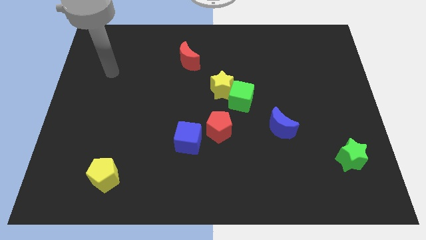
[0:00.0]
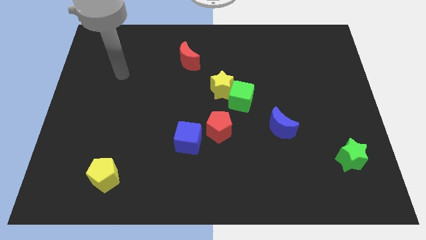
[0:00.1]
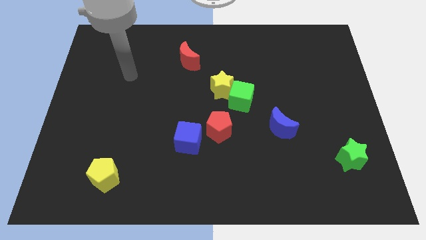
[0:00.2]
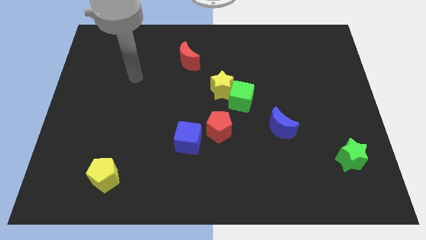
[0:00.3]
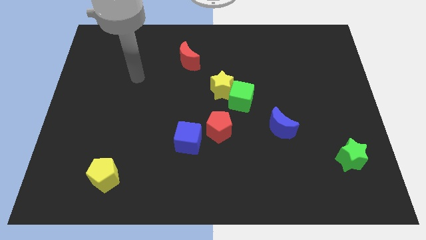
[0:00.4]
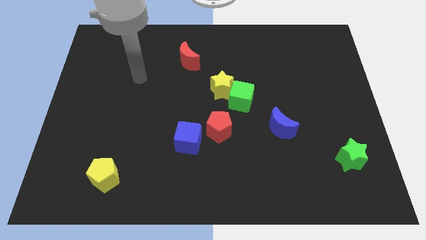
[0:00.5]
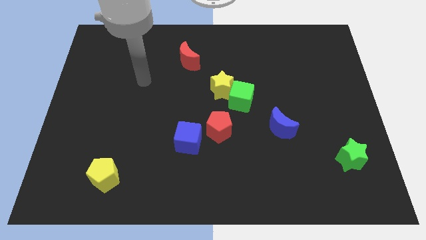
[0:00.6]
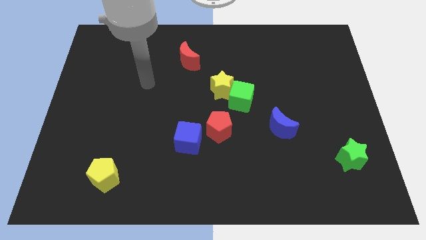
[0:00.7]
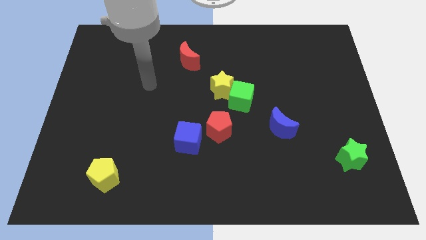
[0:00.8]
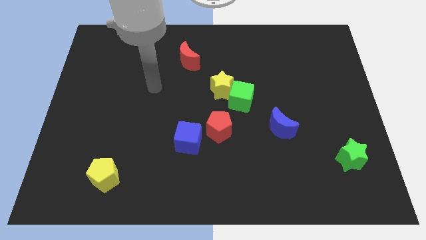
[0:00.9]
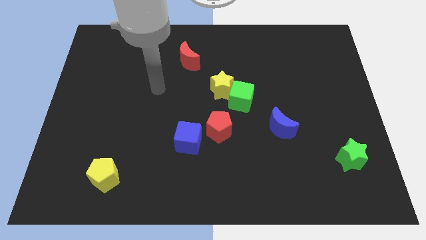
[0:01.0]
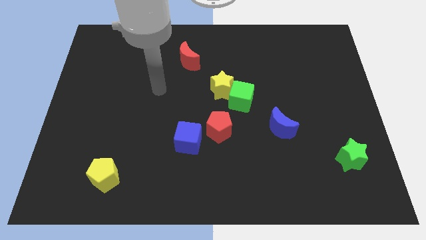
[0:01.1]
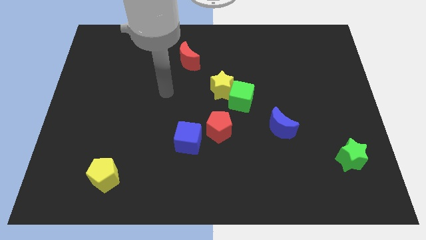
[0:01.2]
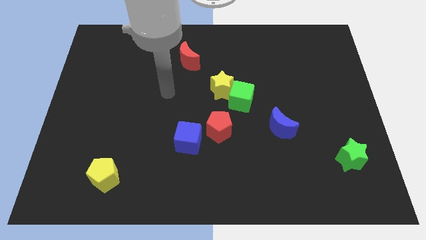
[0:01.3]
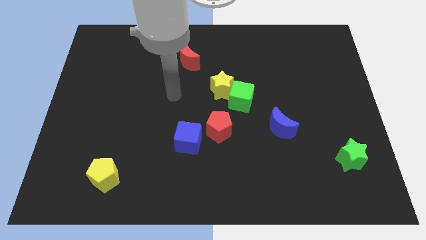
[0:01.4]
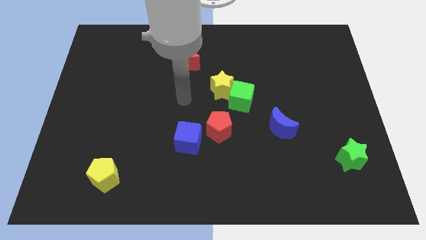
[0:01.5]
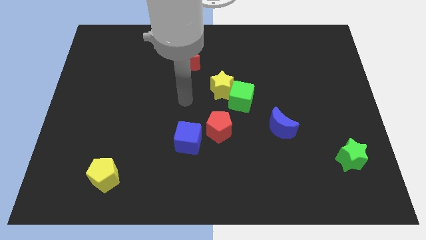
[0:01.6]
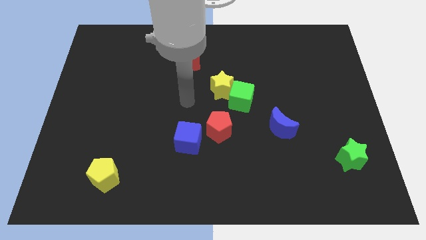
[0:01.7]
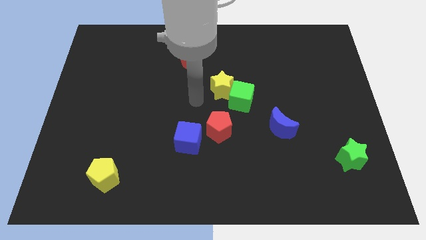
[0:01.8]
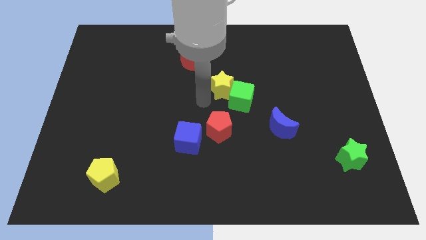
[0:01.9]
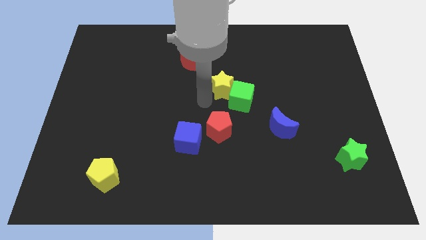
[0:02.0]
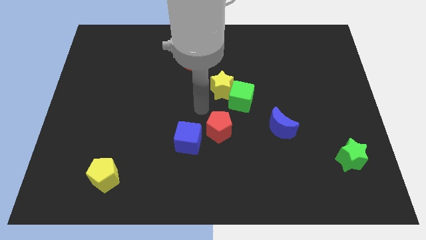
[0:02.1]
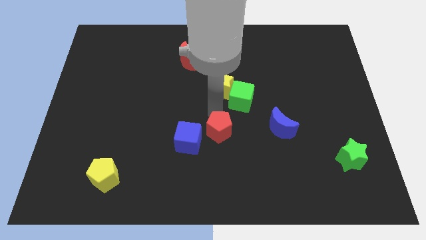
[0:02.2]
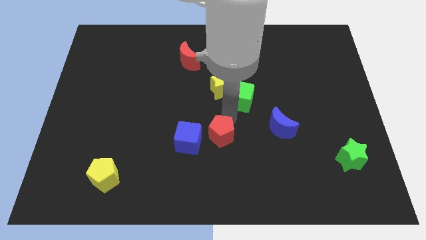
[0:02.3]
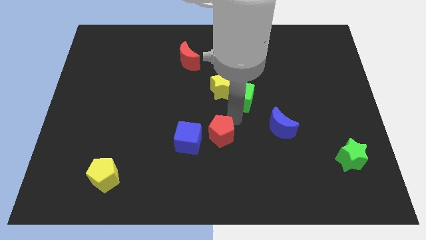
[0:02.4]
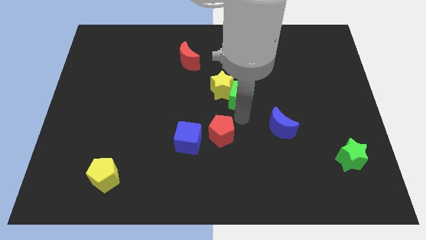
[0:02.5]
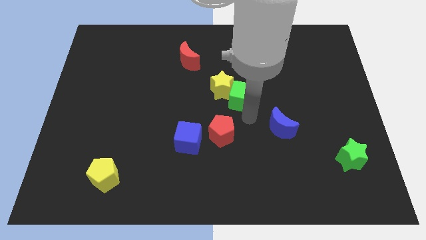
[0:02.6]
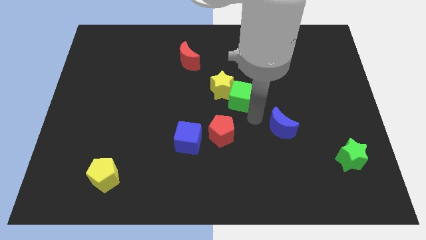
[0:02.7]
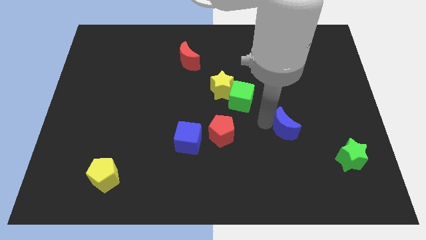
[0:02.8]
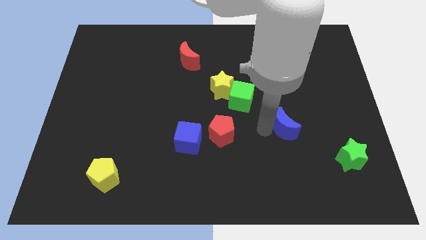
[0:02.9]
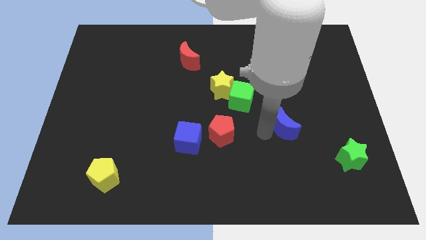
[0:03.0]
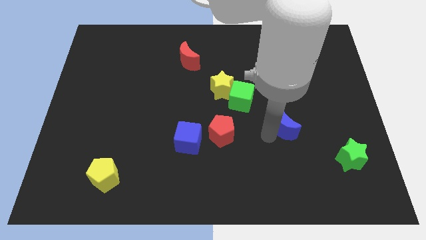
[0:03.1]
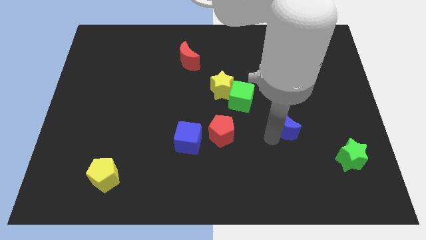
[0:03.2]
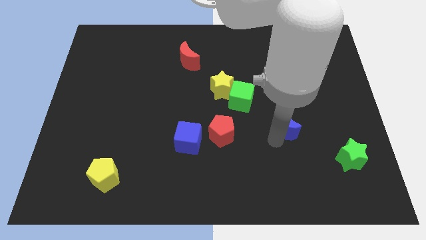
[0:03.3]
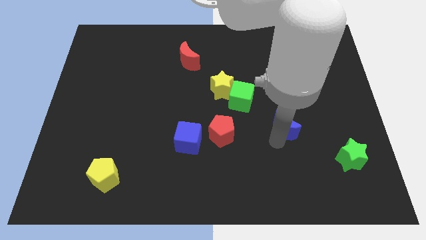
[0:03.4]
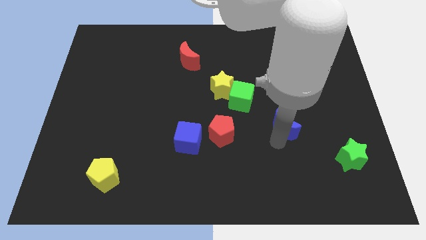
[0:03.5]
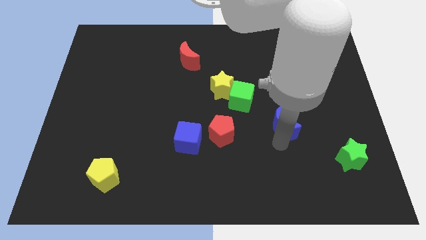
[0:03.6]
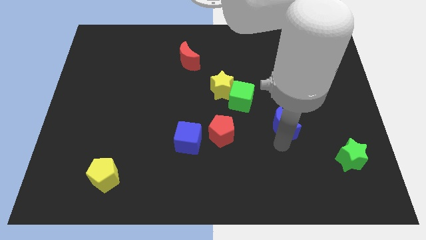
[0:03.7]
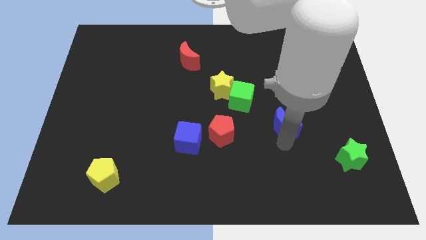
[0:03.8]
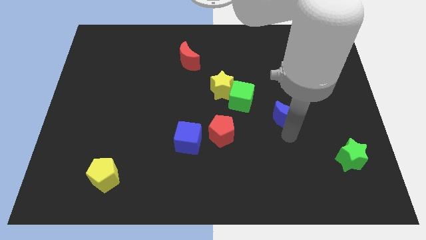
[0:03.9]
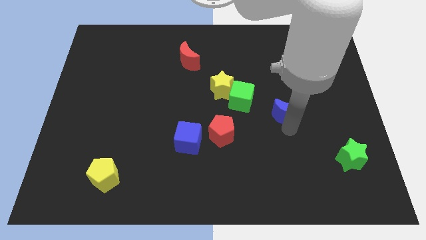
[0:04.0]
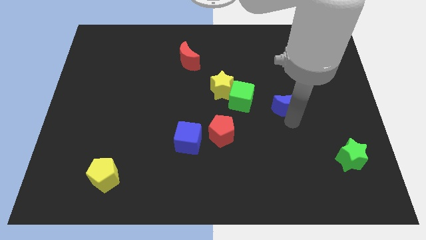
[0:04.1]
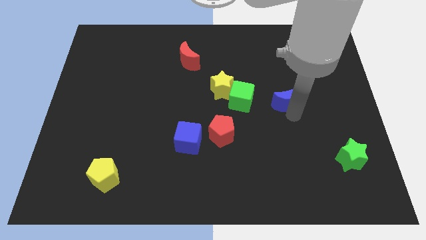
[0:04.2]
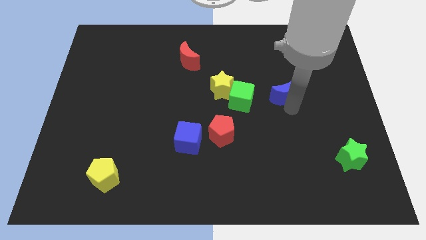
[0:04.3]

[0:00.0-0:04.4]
push the blue moon to the right side of the green cube

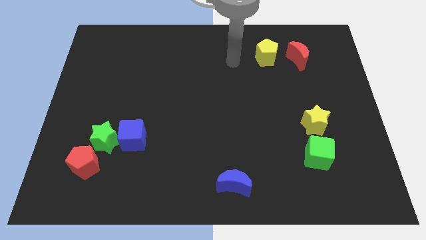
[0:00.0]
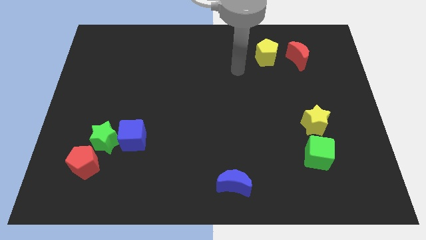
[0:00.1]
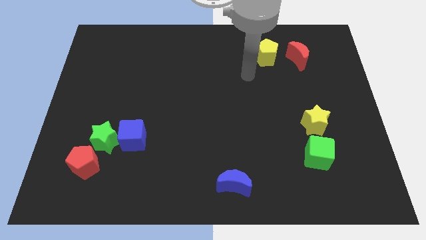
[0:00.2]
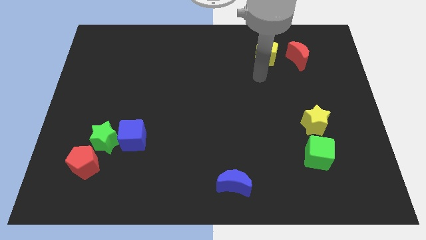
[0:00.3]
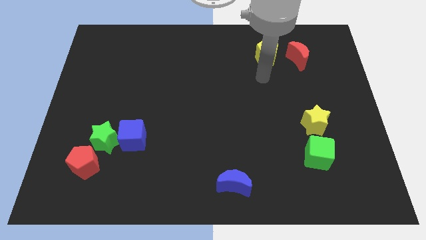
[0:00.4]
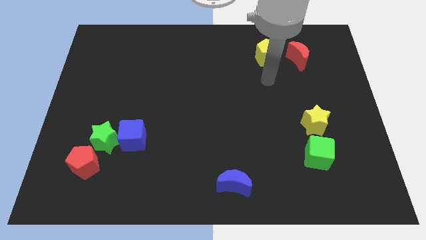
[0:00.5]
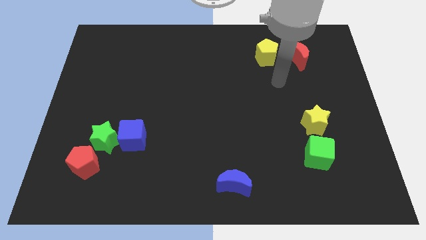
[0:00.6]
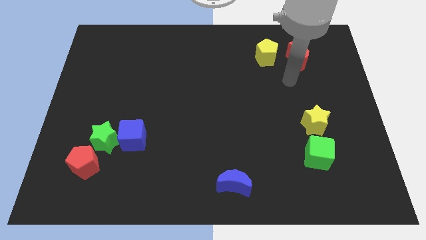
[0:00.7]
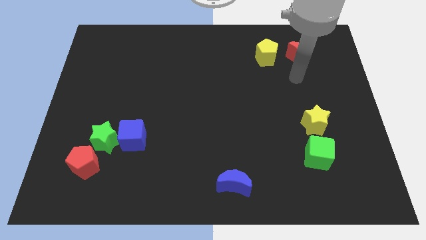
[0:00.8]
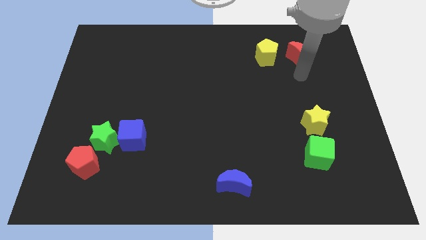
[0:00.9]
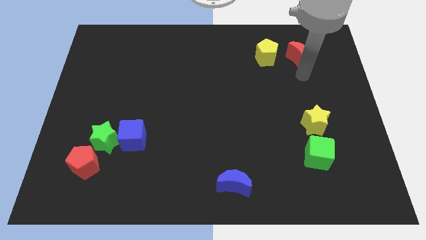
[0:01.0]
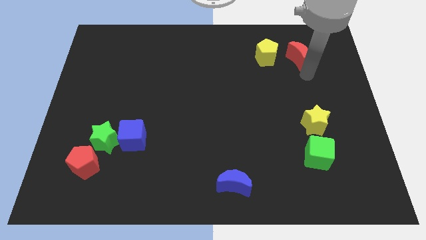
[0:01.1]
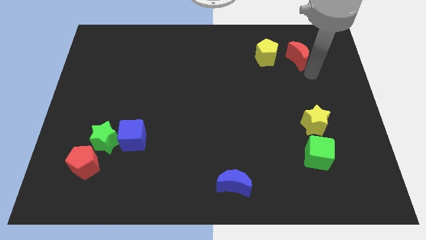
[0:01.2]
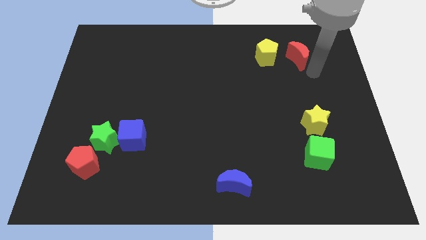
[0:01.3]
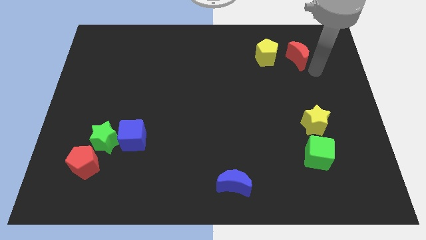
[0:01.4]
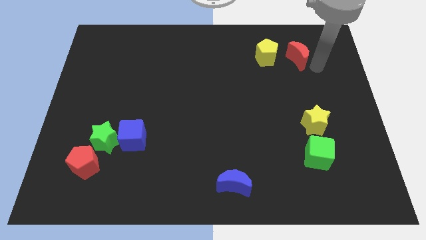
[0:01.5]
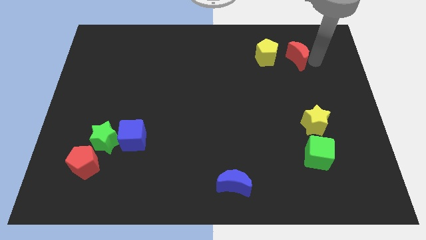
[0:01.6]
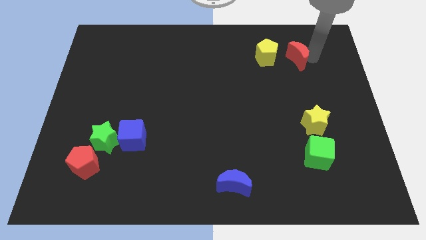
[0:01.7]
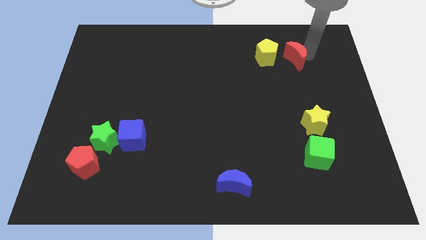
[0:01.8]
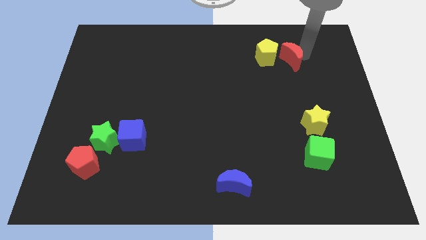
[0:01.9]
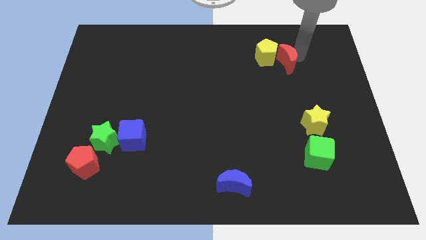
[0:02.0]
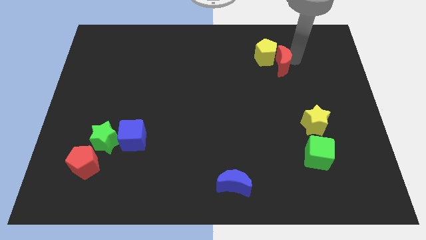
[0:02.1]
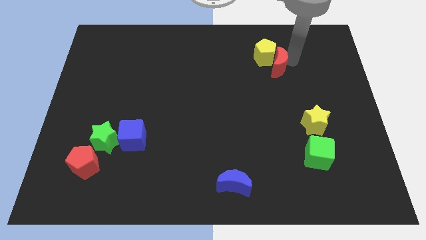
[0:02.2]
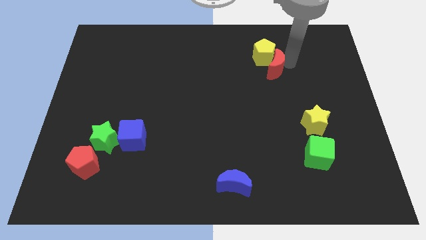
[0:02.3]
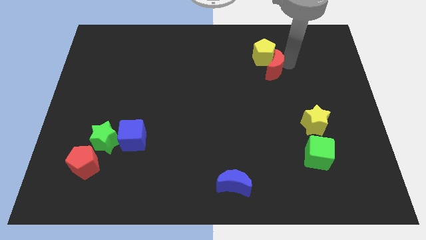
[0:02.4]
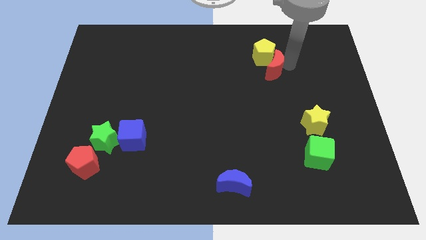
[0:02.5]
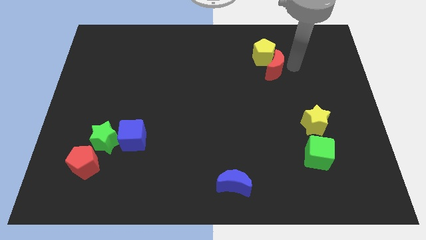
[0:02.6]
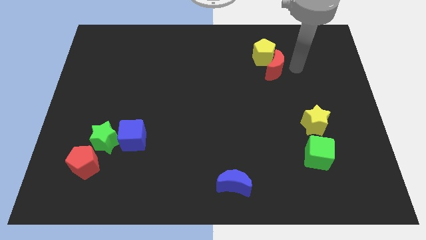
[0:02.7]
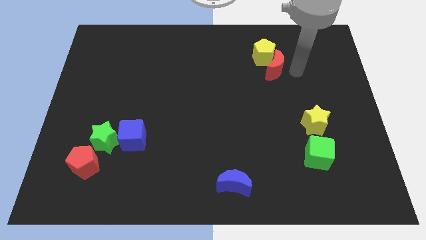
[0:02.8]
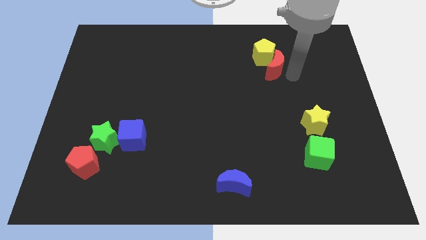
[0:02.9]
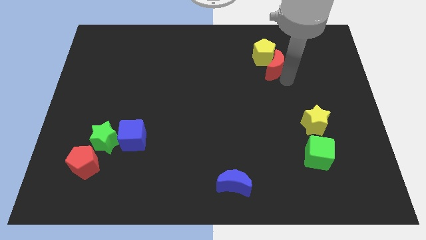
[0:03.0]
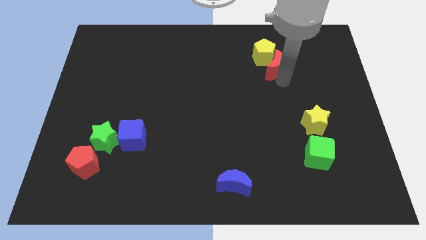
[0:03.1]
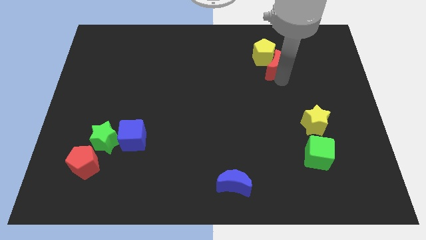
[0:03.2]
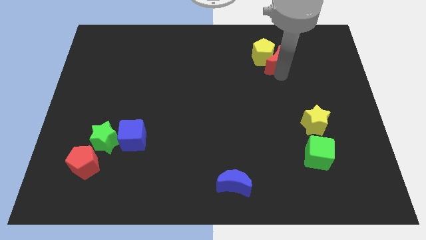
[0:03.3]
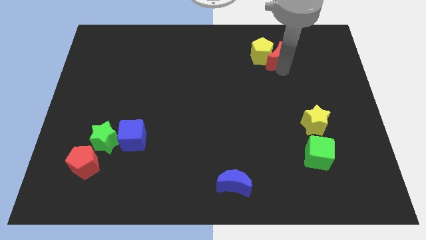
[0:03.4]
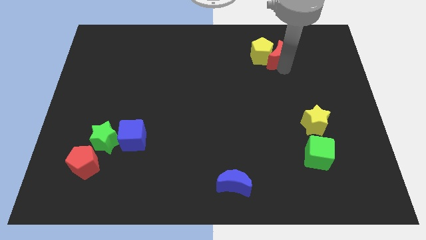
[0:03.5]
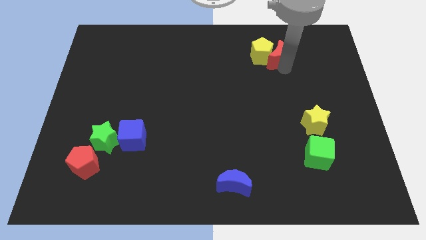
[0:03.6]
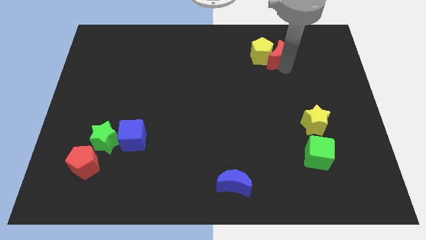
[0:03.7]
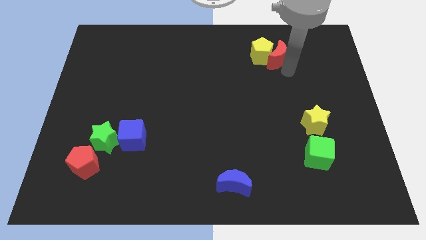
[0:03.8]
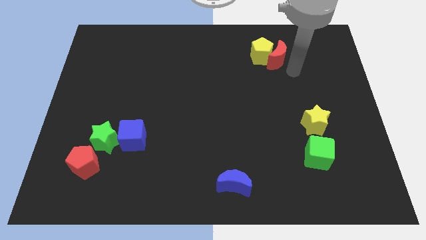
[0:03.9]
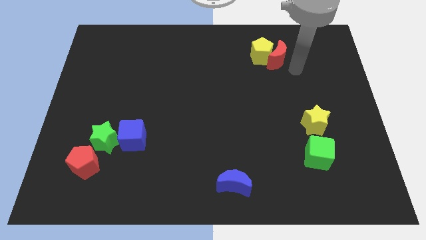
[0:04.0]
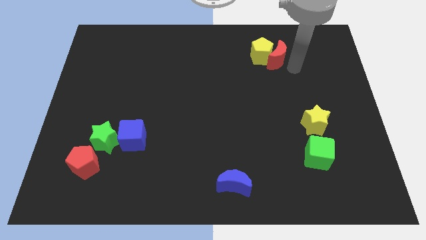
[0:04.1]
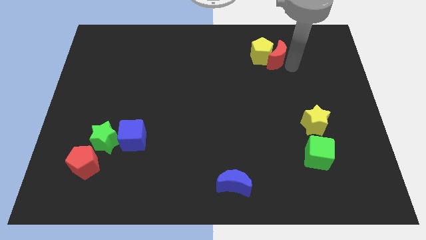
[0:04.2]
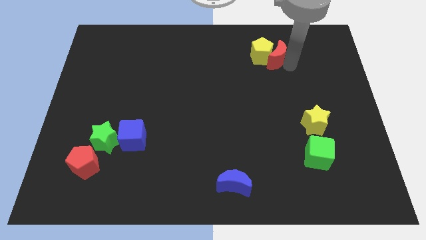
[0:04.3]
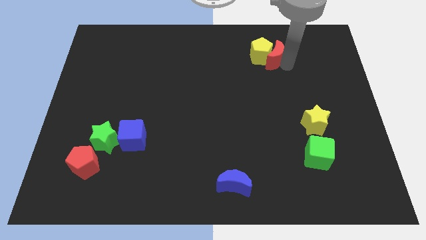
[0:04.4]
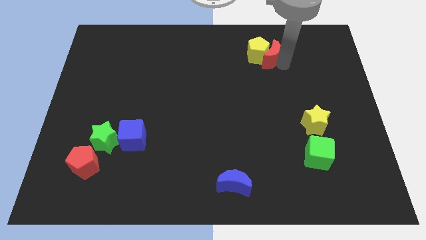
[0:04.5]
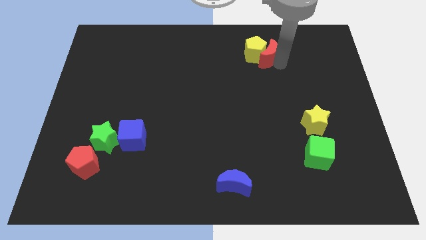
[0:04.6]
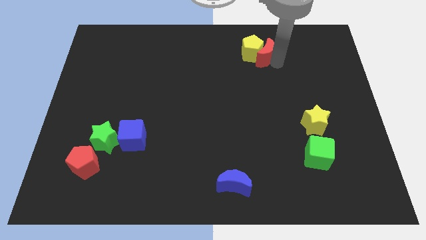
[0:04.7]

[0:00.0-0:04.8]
move the red moon into the yellow pentagon to the left
